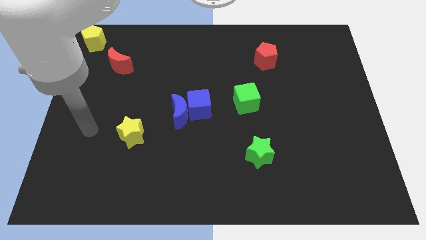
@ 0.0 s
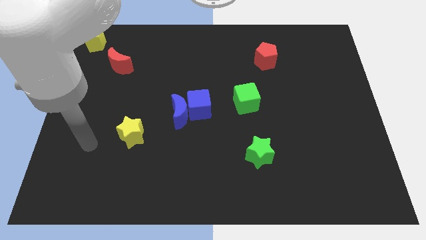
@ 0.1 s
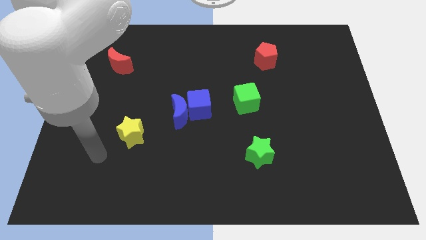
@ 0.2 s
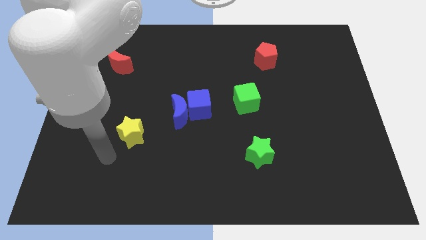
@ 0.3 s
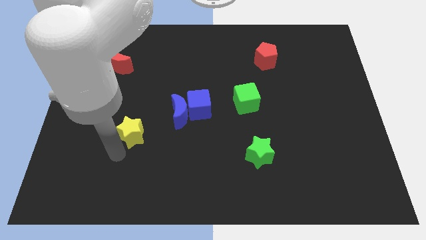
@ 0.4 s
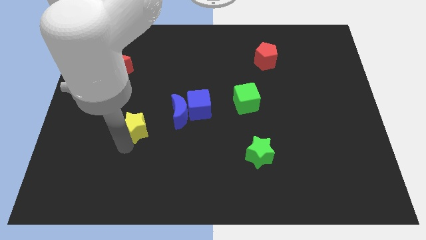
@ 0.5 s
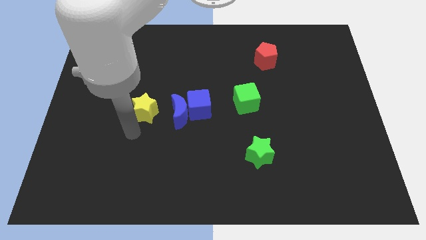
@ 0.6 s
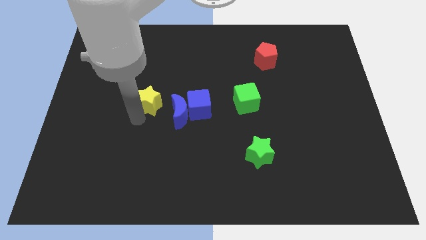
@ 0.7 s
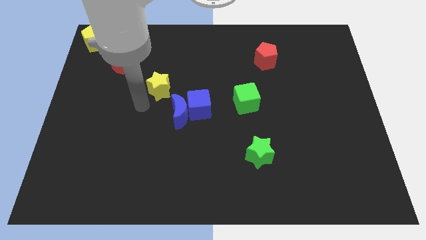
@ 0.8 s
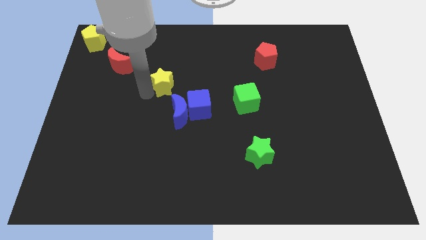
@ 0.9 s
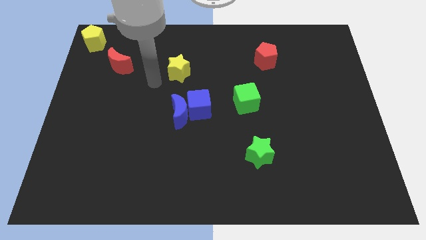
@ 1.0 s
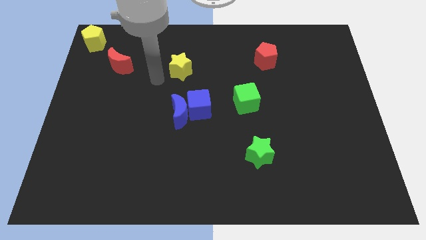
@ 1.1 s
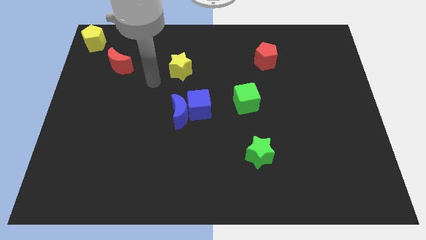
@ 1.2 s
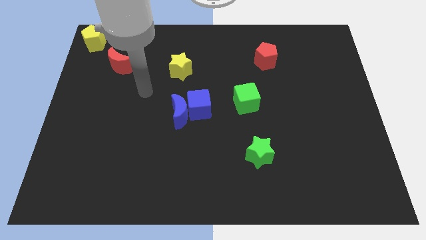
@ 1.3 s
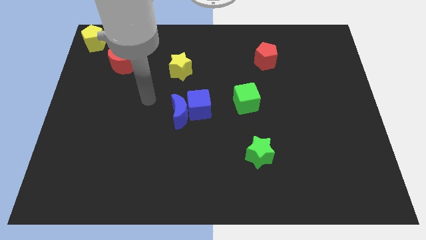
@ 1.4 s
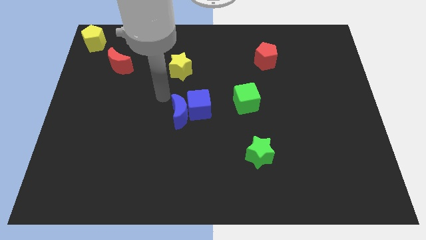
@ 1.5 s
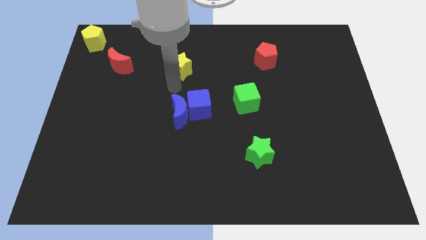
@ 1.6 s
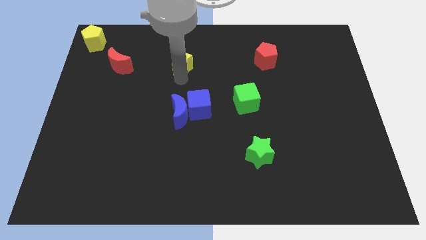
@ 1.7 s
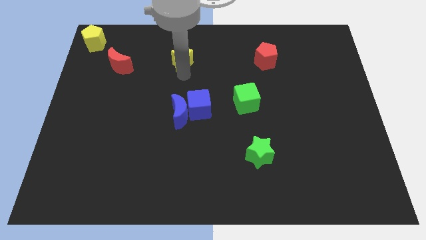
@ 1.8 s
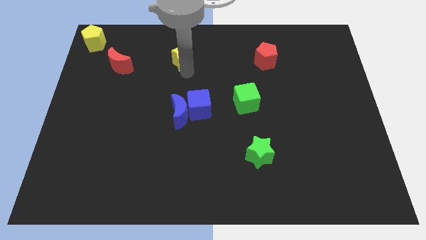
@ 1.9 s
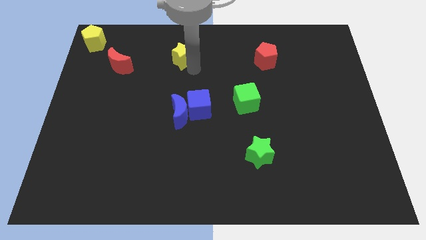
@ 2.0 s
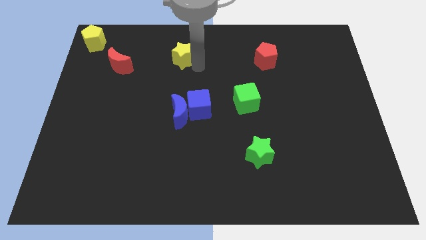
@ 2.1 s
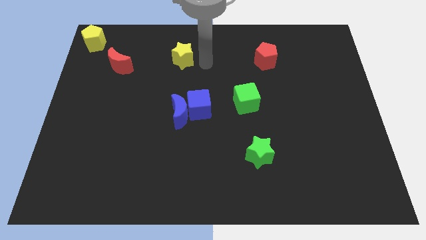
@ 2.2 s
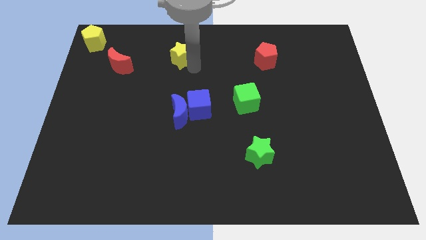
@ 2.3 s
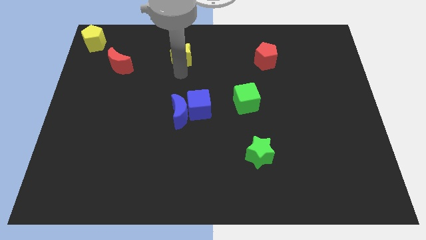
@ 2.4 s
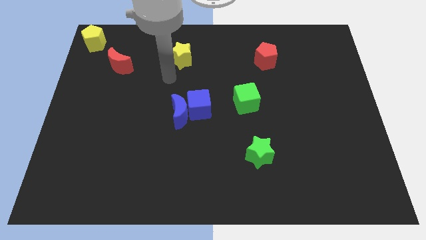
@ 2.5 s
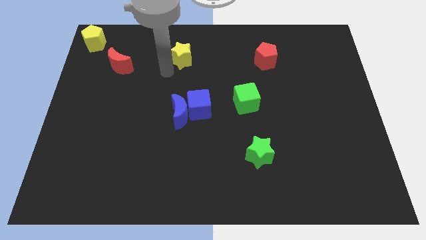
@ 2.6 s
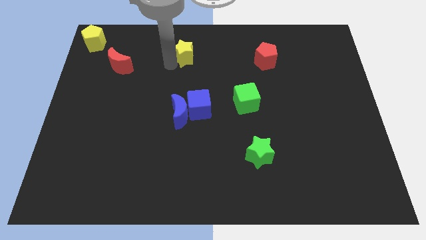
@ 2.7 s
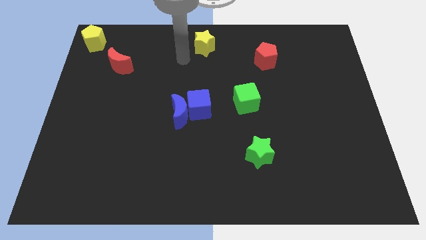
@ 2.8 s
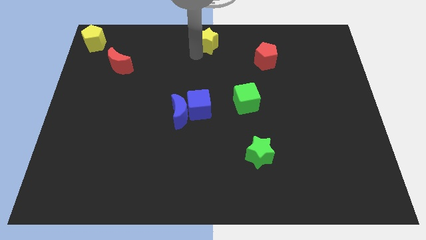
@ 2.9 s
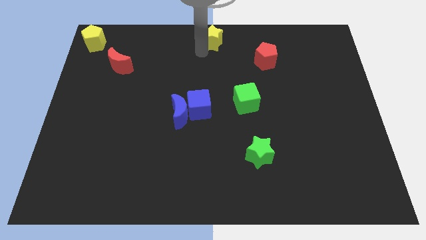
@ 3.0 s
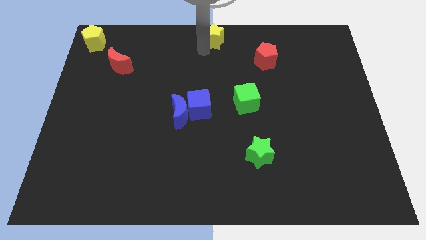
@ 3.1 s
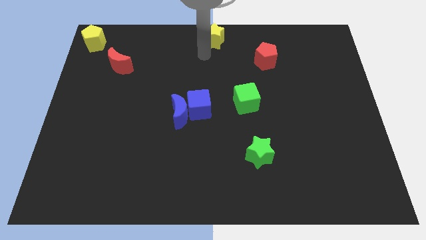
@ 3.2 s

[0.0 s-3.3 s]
move the yellow star to the top center of the board

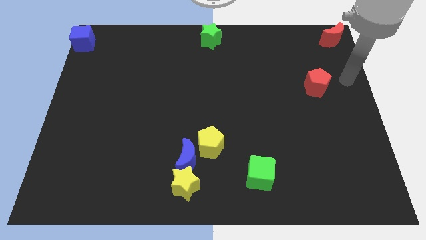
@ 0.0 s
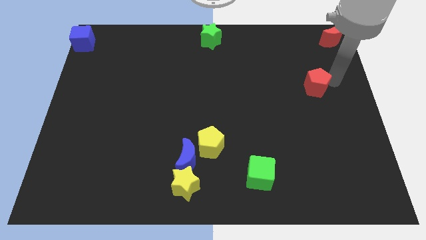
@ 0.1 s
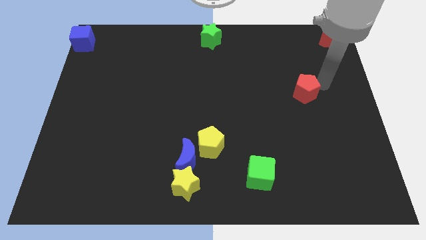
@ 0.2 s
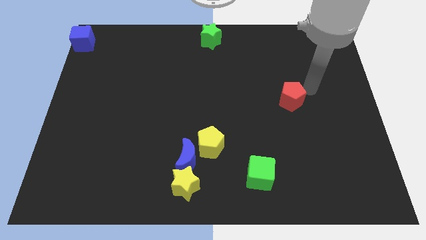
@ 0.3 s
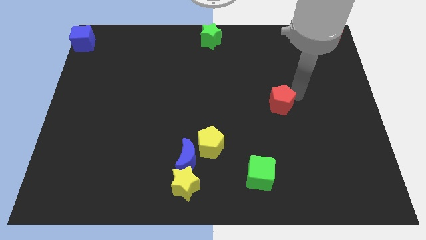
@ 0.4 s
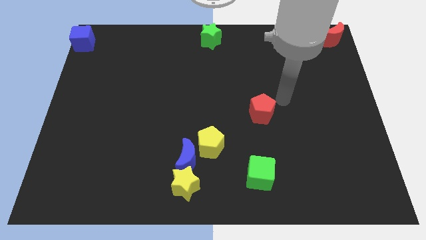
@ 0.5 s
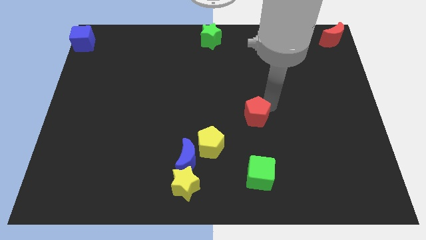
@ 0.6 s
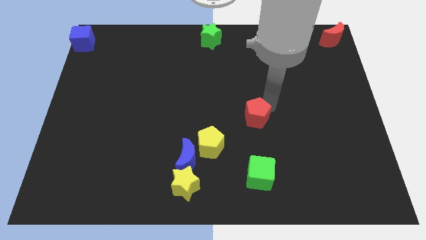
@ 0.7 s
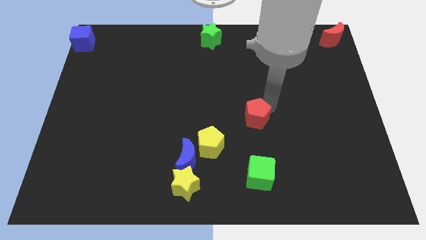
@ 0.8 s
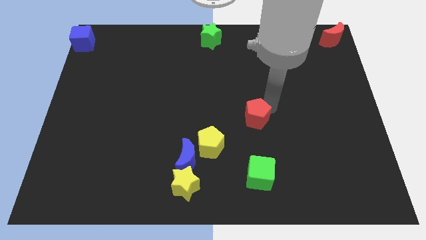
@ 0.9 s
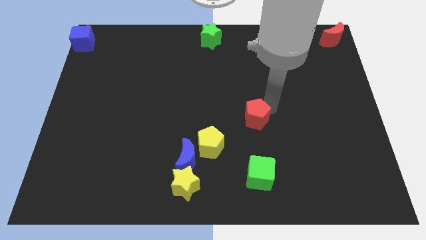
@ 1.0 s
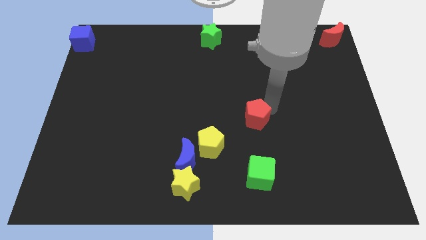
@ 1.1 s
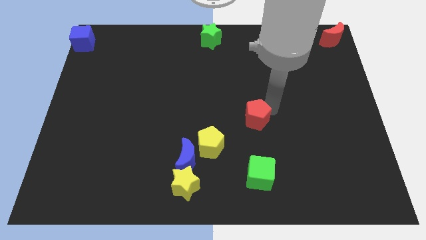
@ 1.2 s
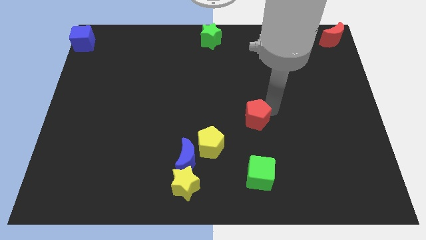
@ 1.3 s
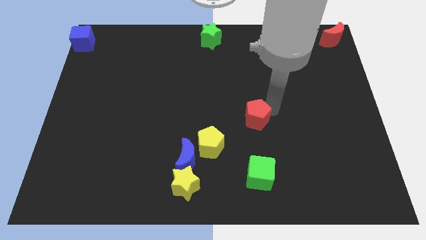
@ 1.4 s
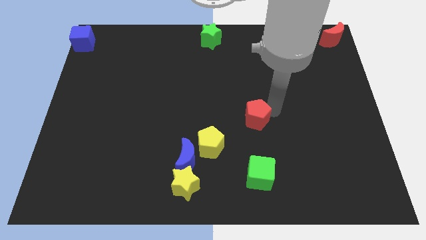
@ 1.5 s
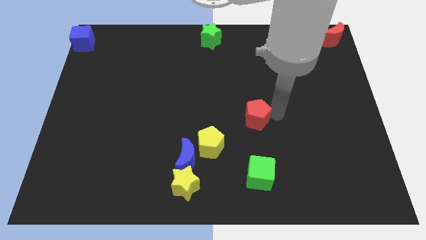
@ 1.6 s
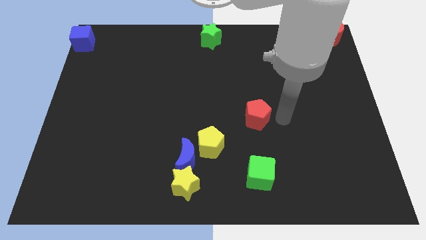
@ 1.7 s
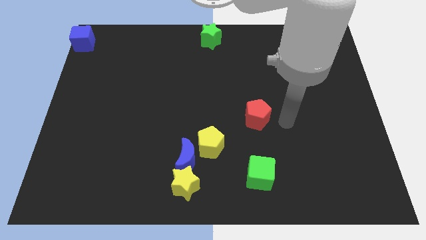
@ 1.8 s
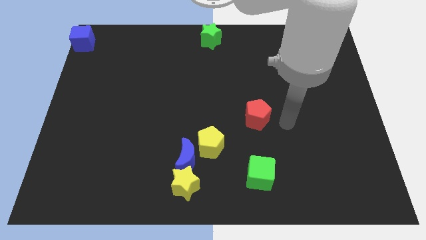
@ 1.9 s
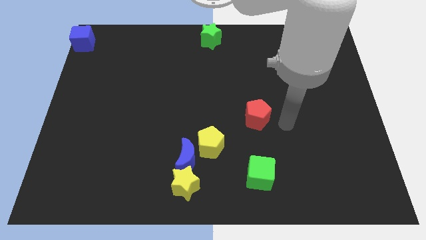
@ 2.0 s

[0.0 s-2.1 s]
push the red pentagon above the green cube

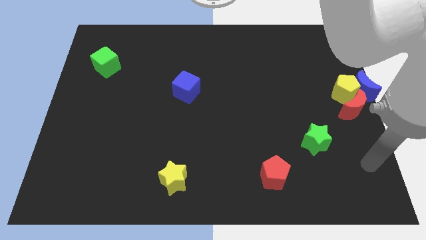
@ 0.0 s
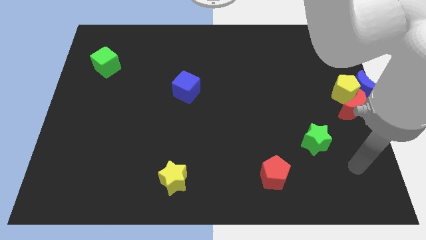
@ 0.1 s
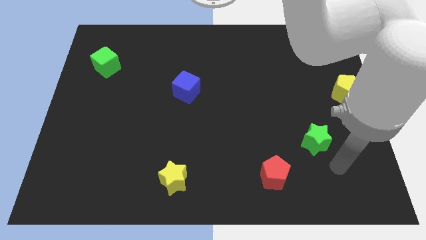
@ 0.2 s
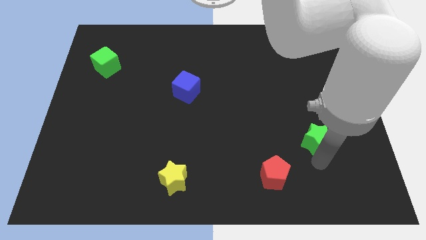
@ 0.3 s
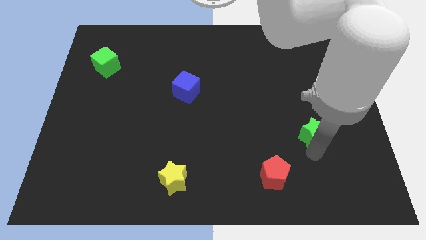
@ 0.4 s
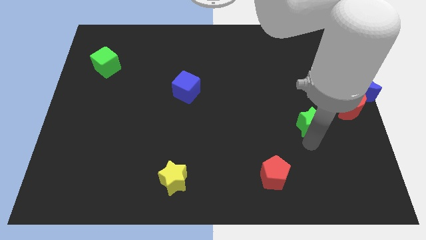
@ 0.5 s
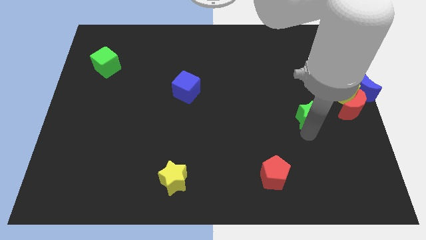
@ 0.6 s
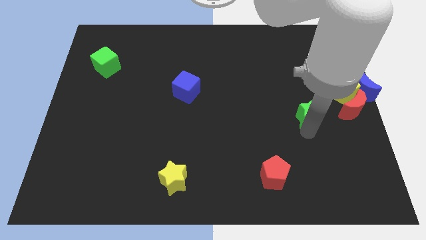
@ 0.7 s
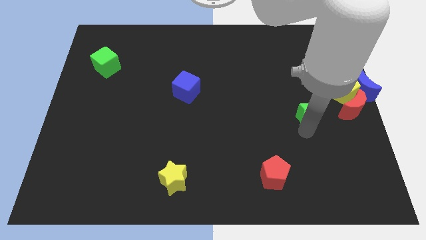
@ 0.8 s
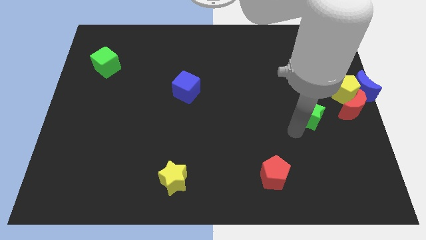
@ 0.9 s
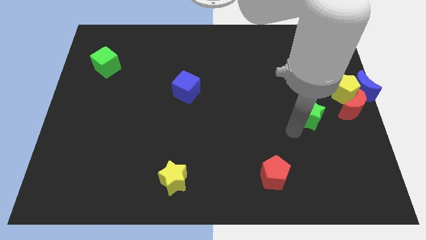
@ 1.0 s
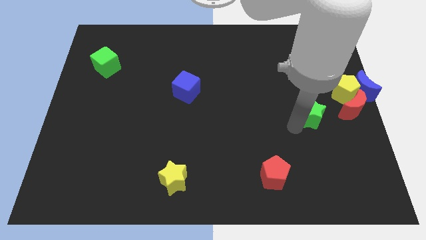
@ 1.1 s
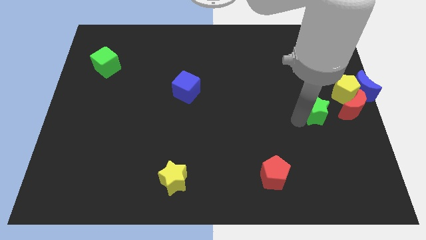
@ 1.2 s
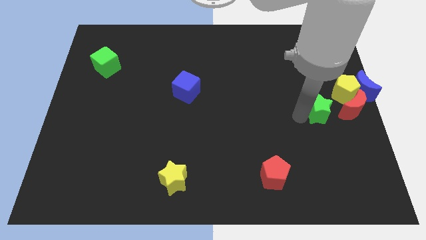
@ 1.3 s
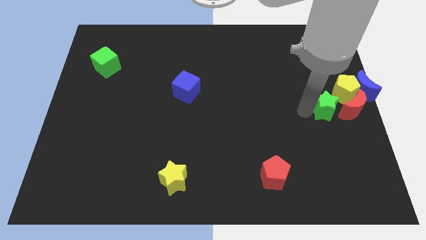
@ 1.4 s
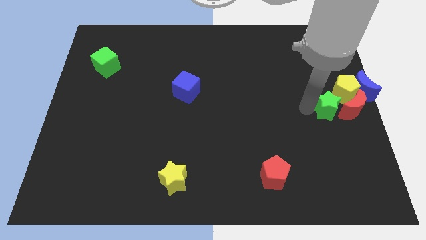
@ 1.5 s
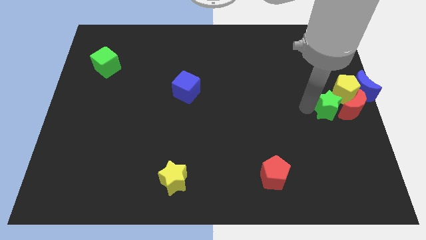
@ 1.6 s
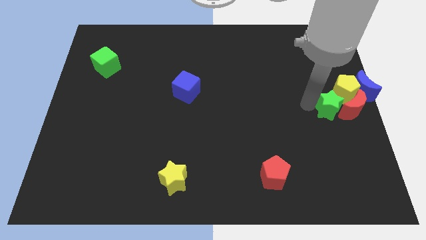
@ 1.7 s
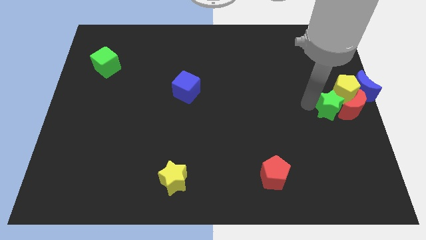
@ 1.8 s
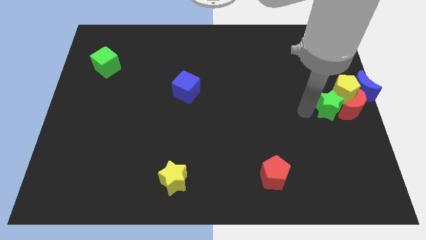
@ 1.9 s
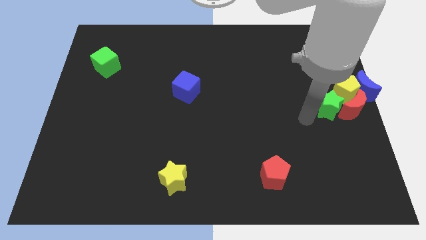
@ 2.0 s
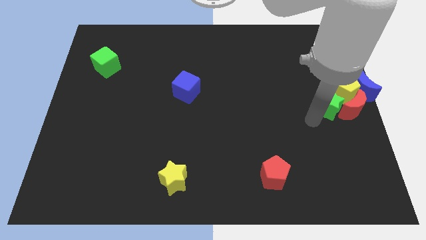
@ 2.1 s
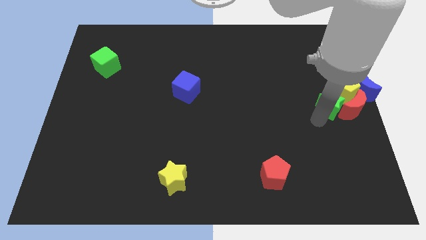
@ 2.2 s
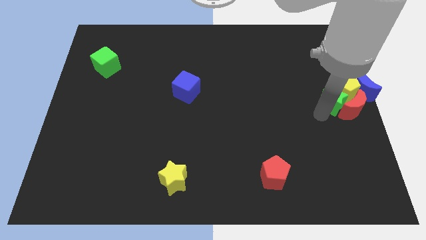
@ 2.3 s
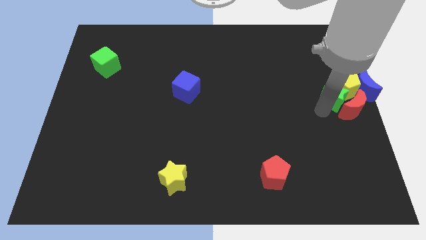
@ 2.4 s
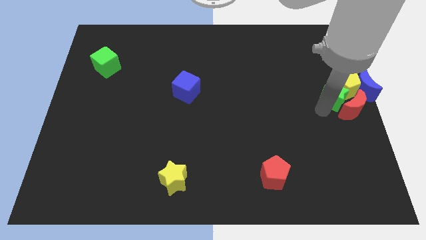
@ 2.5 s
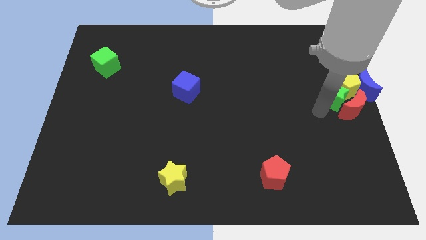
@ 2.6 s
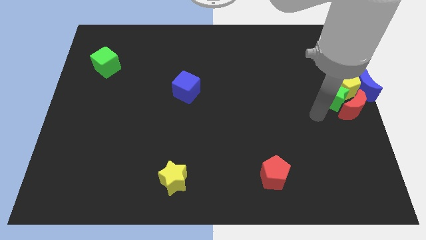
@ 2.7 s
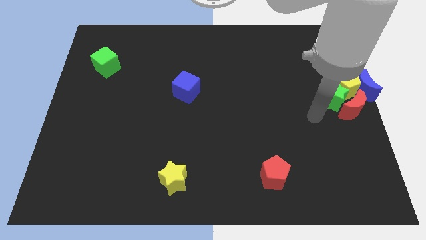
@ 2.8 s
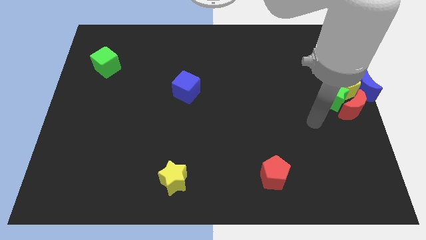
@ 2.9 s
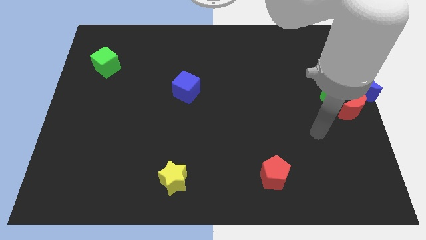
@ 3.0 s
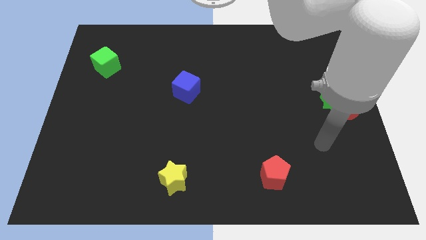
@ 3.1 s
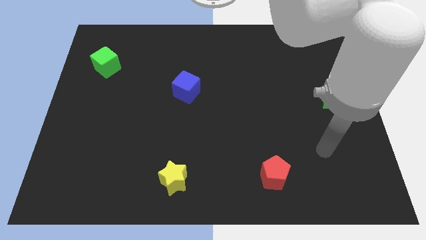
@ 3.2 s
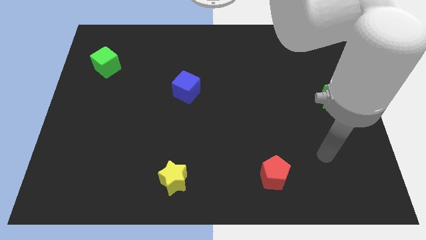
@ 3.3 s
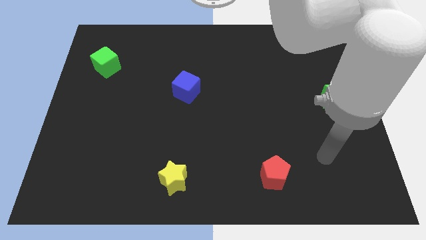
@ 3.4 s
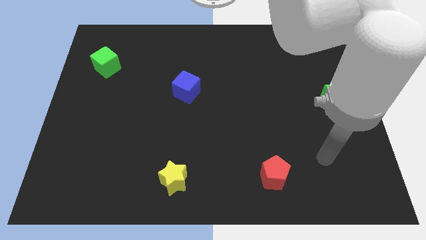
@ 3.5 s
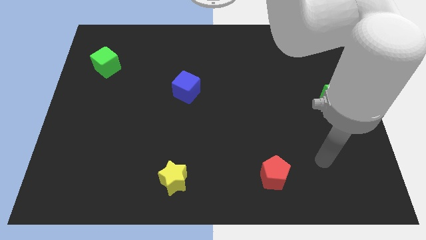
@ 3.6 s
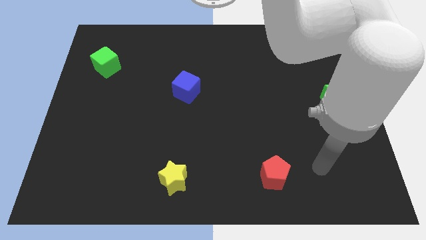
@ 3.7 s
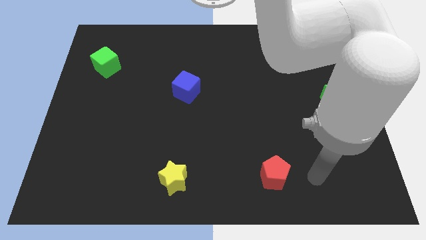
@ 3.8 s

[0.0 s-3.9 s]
push the green star towards the center right of the board
